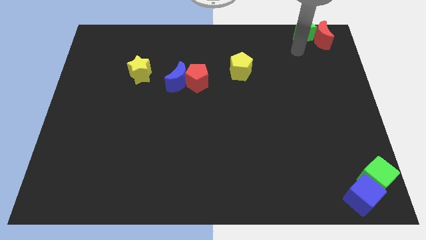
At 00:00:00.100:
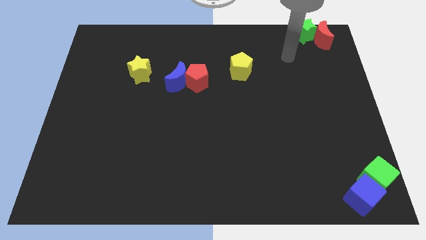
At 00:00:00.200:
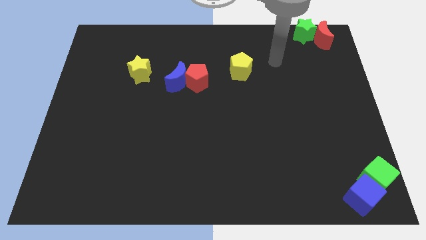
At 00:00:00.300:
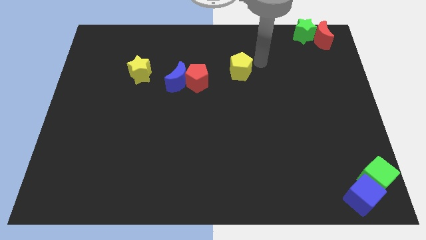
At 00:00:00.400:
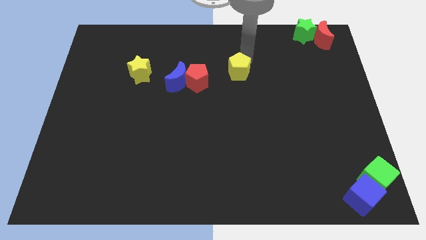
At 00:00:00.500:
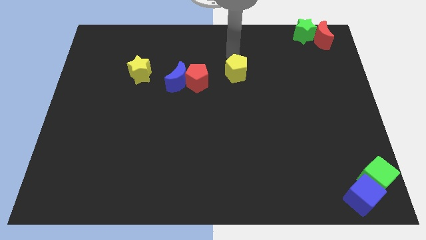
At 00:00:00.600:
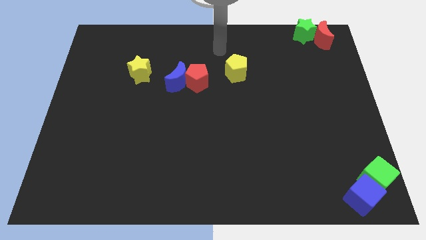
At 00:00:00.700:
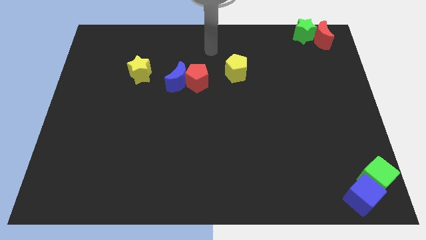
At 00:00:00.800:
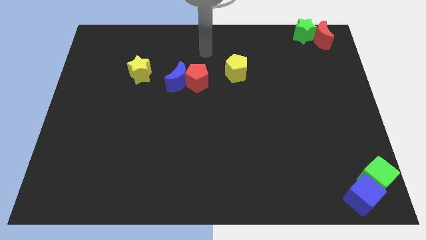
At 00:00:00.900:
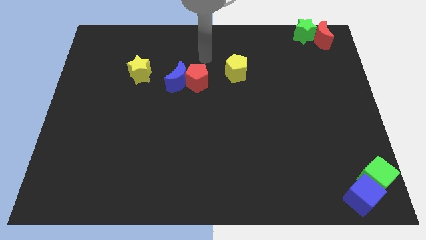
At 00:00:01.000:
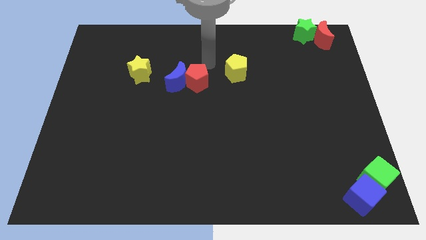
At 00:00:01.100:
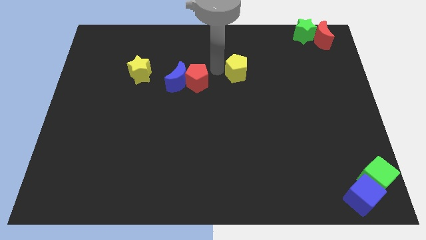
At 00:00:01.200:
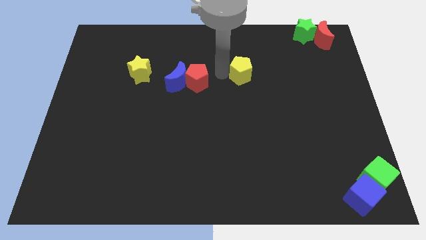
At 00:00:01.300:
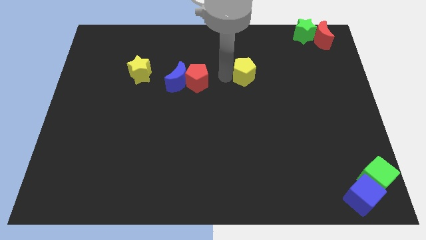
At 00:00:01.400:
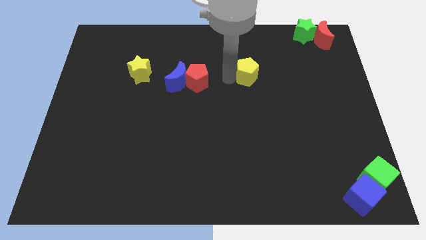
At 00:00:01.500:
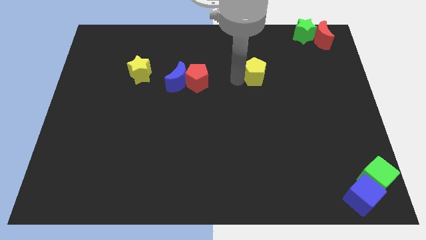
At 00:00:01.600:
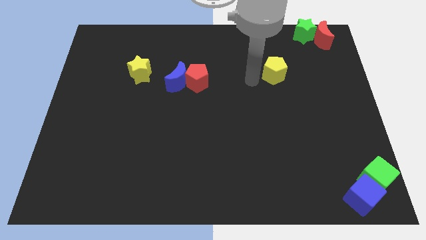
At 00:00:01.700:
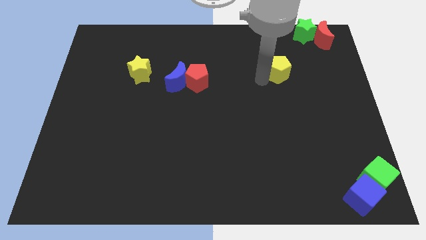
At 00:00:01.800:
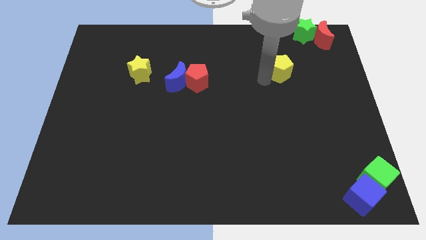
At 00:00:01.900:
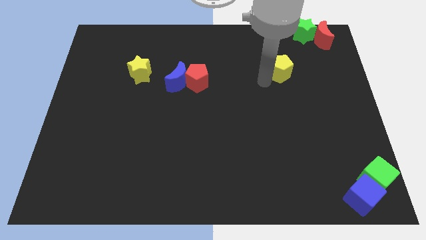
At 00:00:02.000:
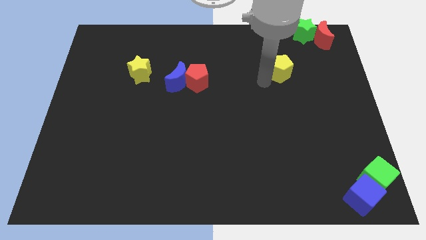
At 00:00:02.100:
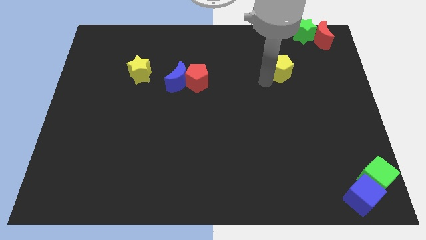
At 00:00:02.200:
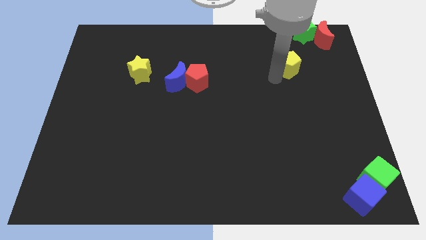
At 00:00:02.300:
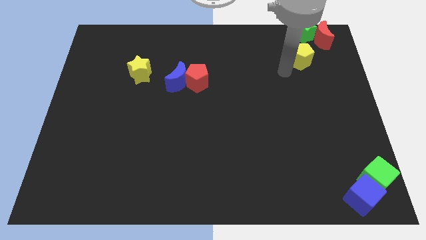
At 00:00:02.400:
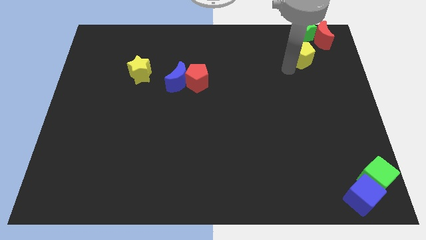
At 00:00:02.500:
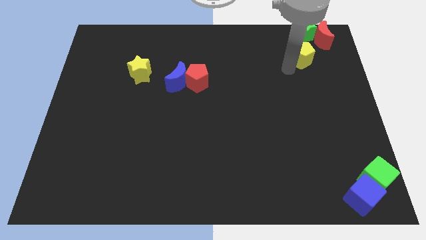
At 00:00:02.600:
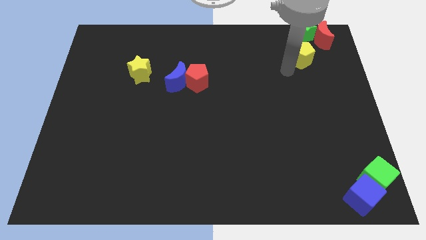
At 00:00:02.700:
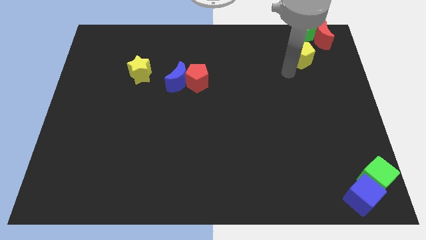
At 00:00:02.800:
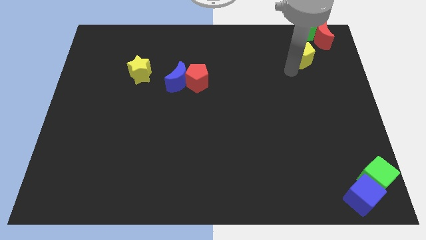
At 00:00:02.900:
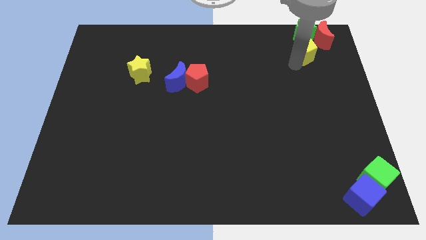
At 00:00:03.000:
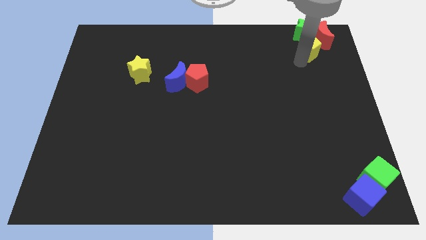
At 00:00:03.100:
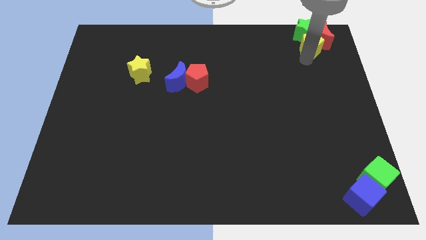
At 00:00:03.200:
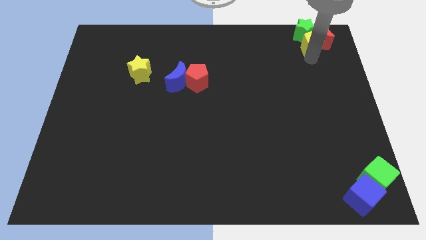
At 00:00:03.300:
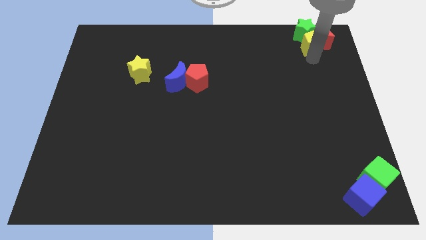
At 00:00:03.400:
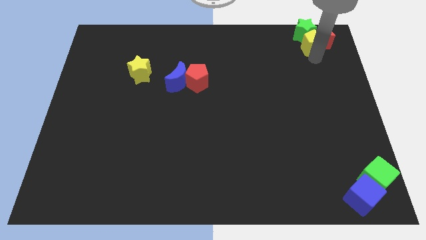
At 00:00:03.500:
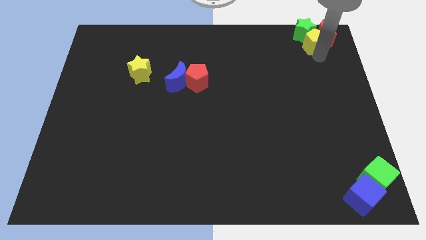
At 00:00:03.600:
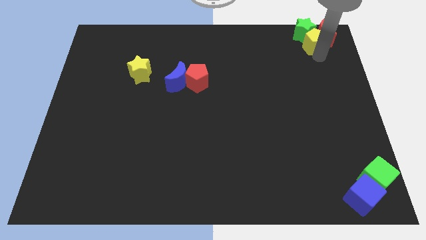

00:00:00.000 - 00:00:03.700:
make a group of green star red crescent and yellow pentagon

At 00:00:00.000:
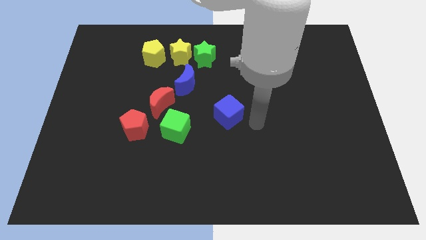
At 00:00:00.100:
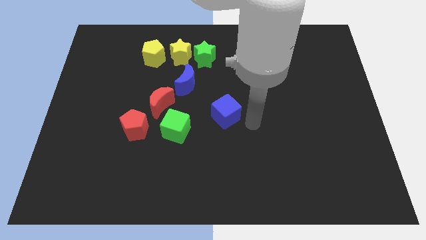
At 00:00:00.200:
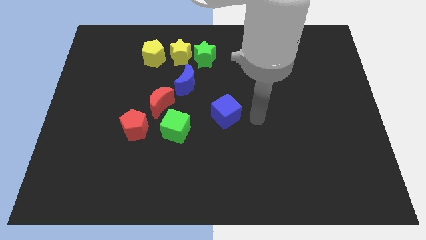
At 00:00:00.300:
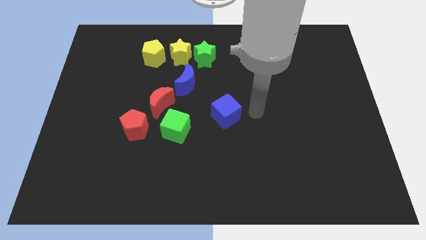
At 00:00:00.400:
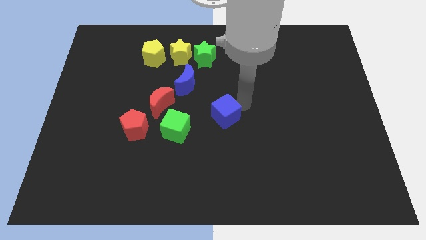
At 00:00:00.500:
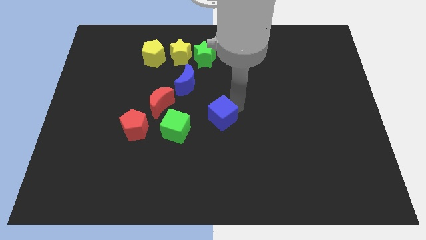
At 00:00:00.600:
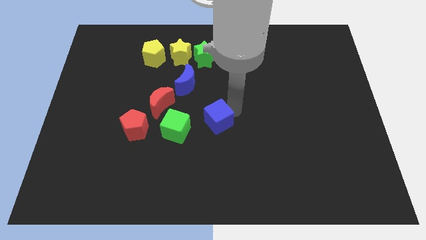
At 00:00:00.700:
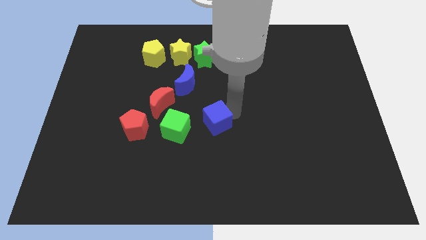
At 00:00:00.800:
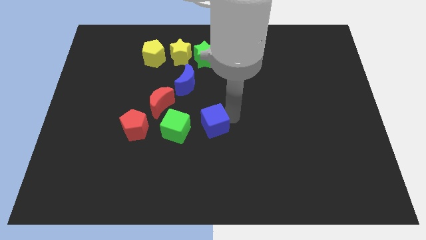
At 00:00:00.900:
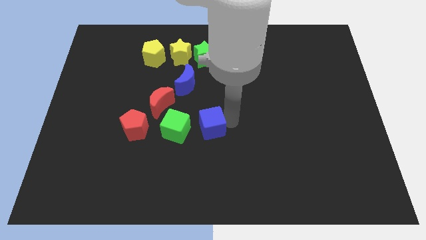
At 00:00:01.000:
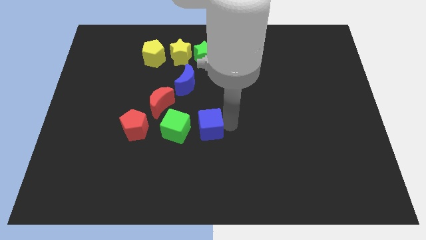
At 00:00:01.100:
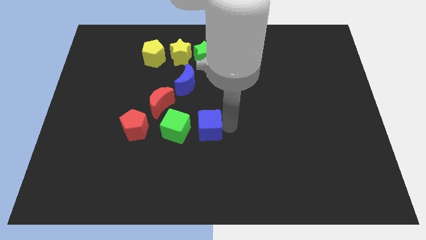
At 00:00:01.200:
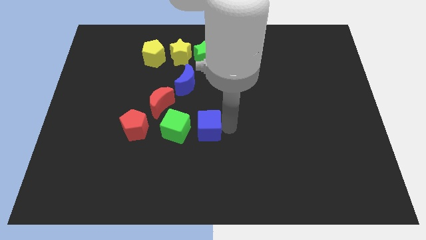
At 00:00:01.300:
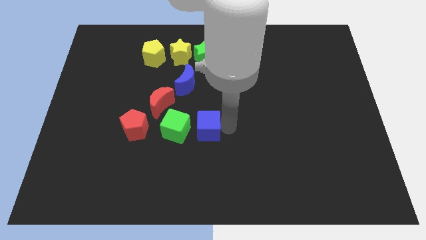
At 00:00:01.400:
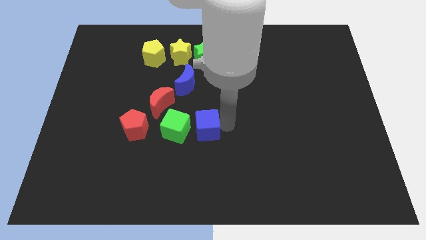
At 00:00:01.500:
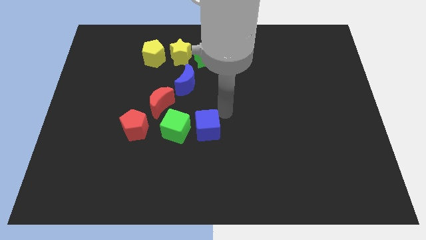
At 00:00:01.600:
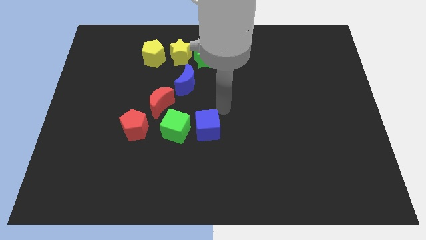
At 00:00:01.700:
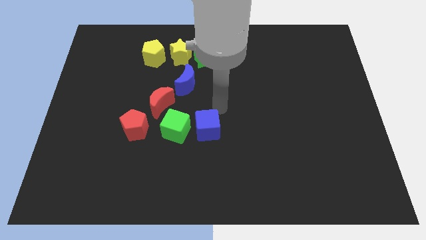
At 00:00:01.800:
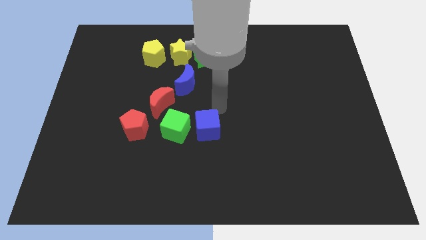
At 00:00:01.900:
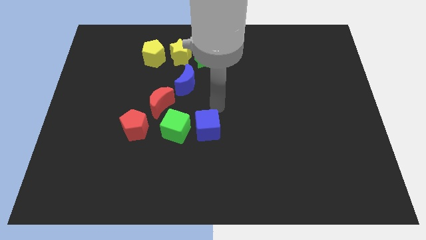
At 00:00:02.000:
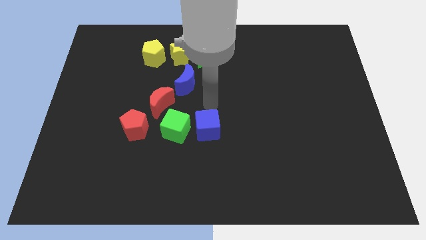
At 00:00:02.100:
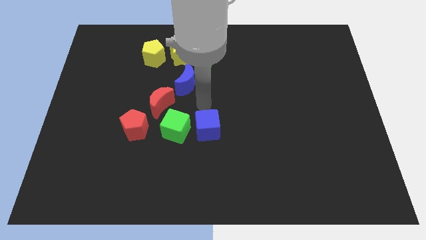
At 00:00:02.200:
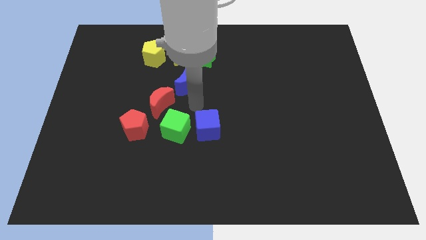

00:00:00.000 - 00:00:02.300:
place the blue cube close to the green cube

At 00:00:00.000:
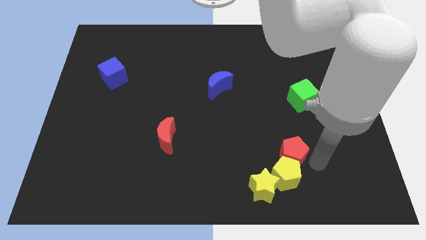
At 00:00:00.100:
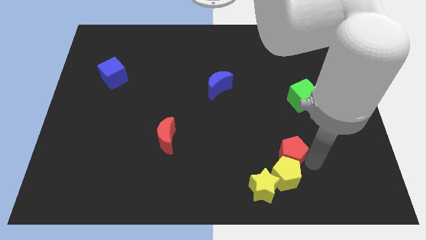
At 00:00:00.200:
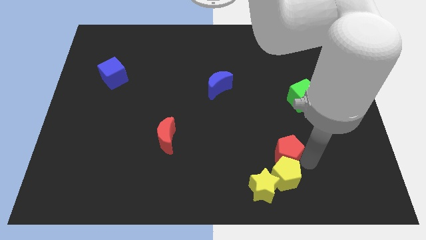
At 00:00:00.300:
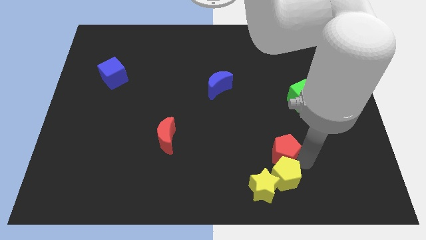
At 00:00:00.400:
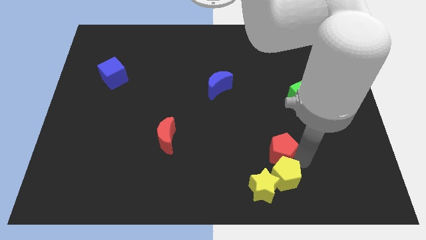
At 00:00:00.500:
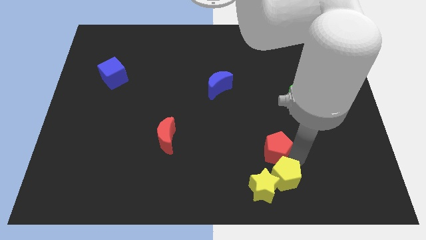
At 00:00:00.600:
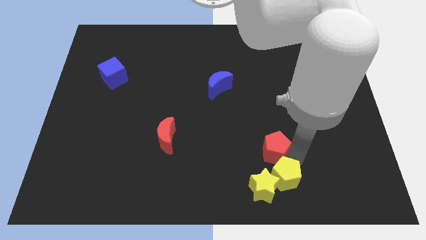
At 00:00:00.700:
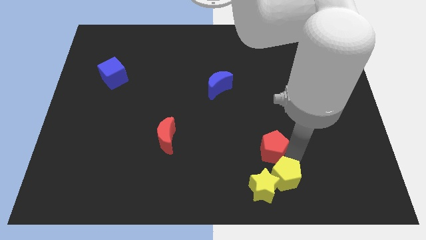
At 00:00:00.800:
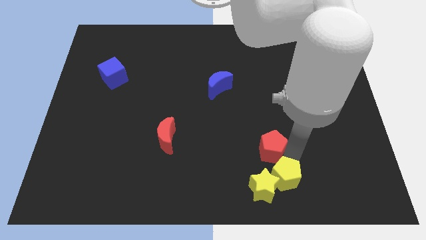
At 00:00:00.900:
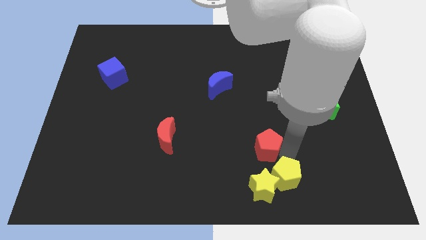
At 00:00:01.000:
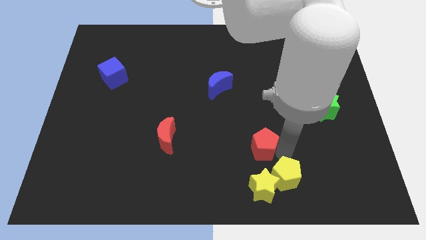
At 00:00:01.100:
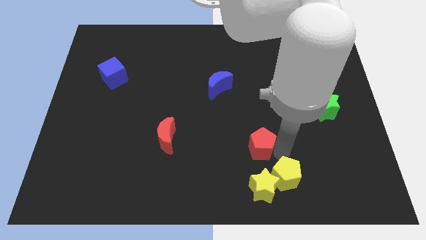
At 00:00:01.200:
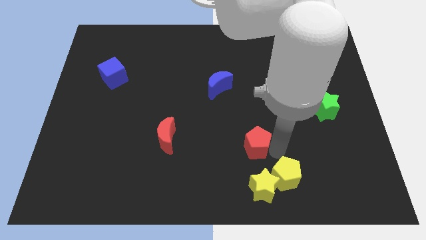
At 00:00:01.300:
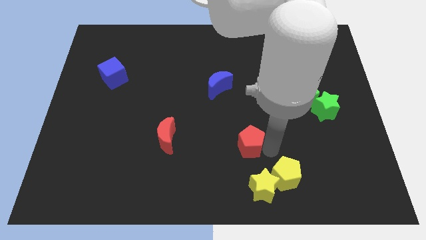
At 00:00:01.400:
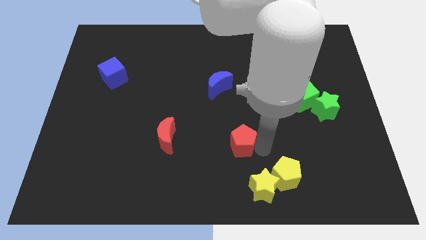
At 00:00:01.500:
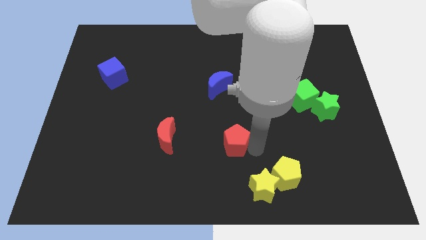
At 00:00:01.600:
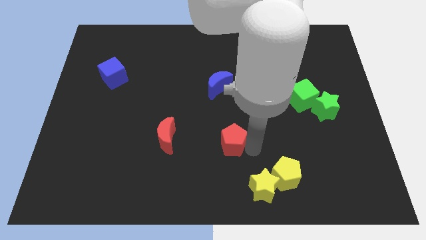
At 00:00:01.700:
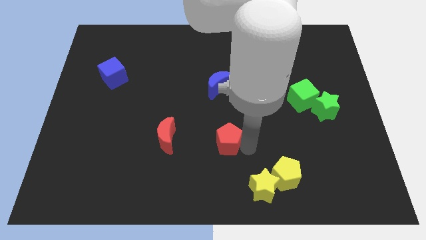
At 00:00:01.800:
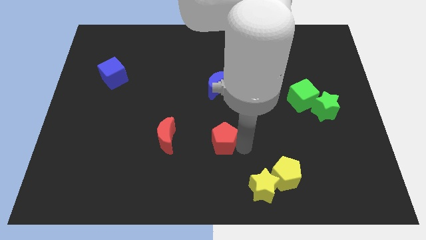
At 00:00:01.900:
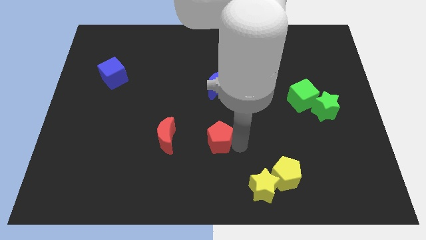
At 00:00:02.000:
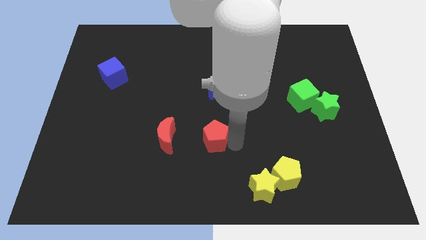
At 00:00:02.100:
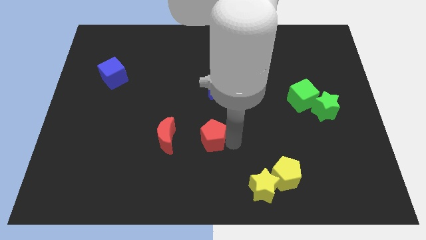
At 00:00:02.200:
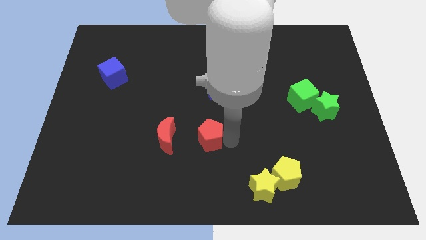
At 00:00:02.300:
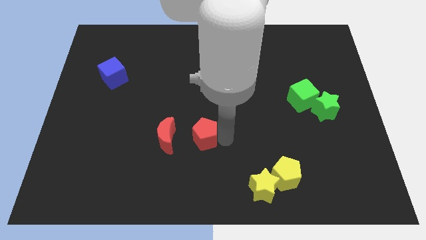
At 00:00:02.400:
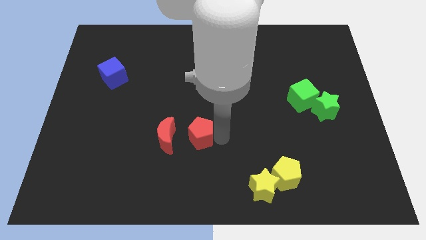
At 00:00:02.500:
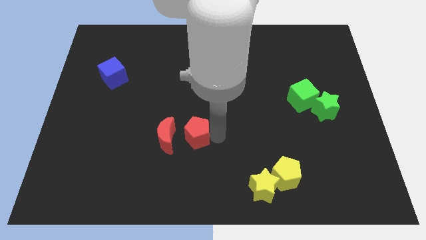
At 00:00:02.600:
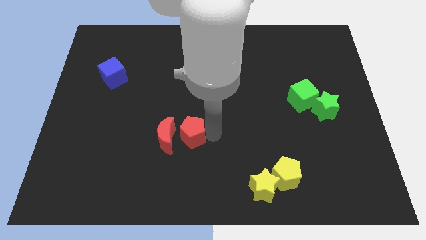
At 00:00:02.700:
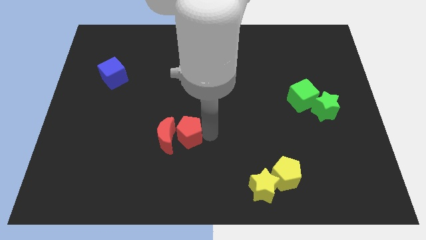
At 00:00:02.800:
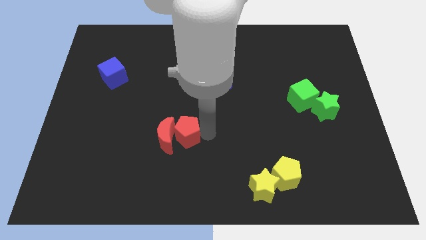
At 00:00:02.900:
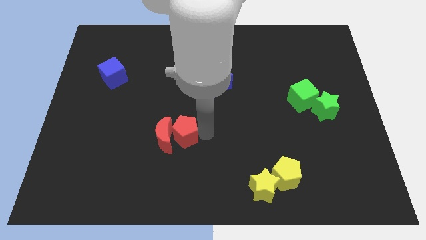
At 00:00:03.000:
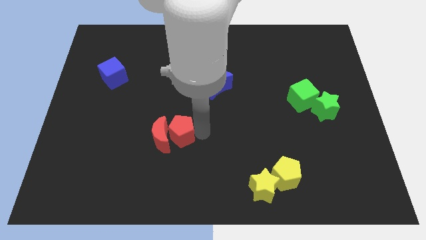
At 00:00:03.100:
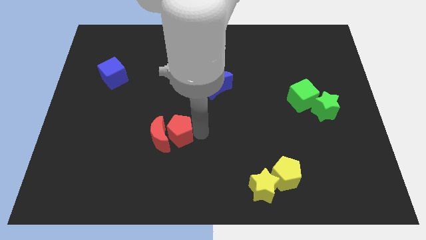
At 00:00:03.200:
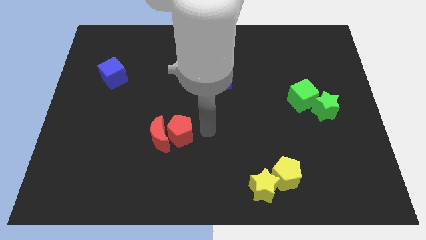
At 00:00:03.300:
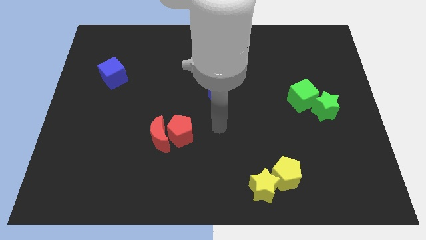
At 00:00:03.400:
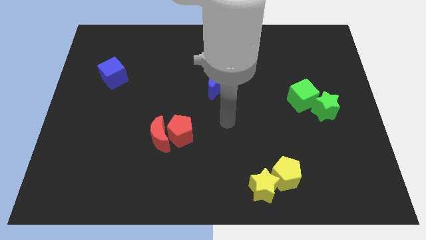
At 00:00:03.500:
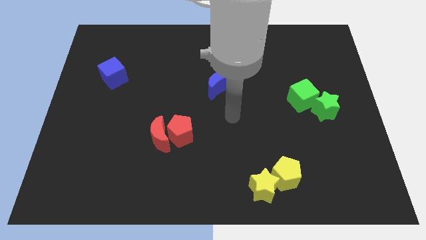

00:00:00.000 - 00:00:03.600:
move the red pentagon into the red moon
